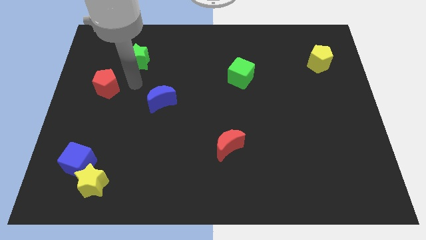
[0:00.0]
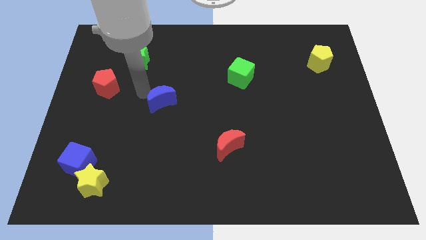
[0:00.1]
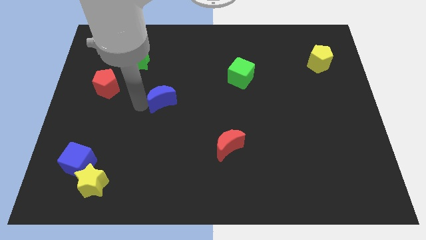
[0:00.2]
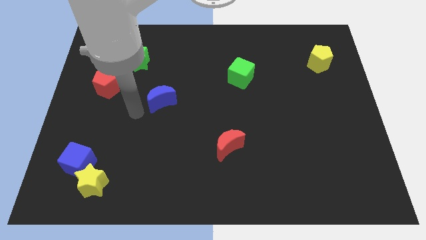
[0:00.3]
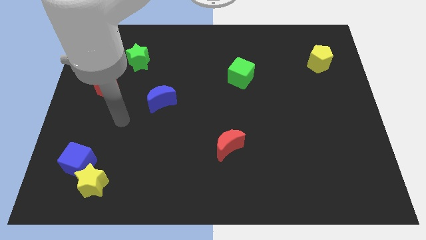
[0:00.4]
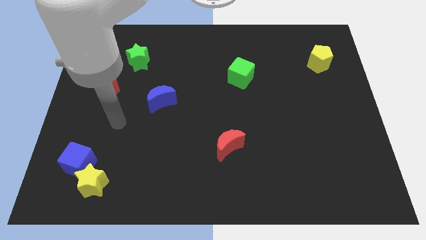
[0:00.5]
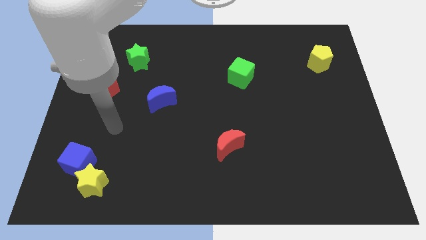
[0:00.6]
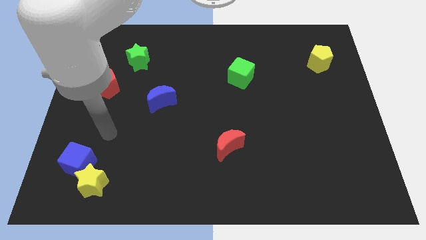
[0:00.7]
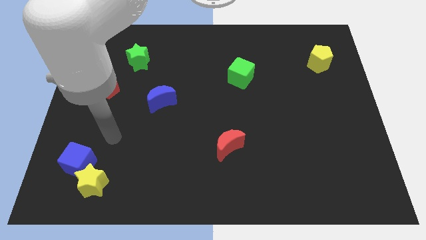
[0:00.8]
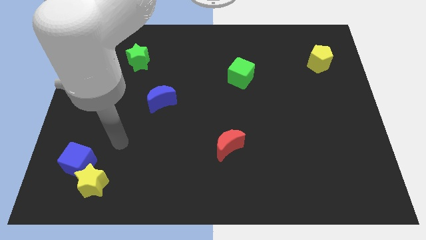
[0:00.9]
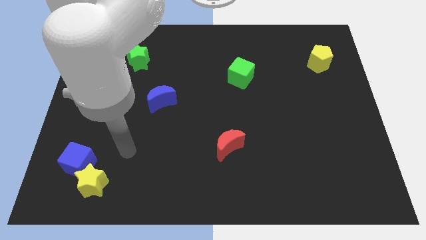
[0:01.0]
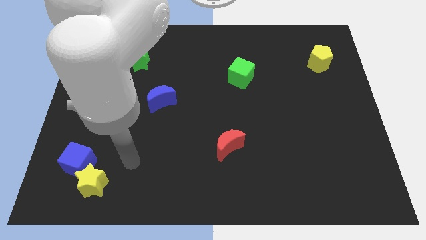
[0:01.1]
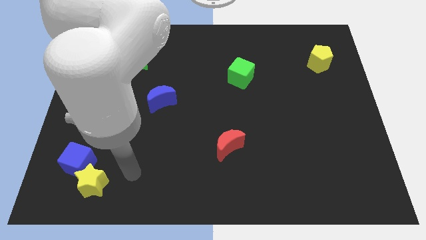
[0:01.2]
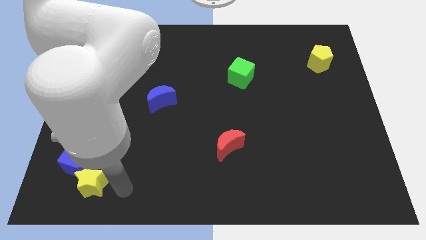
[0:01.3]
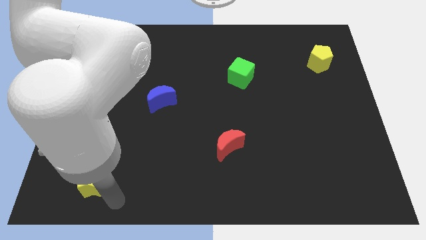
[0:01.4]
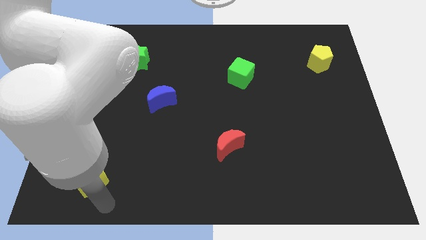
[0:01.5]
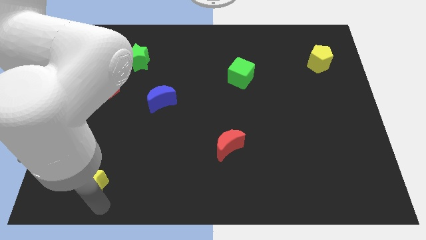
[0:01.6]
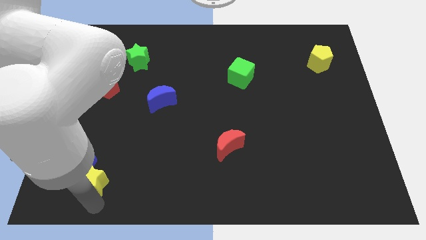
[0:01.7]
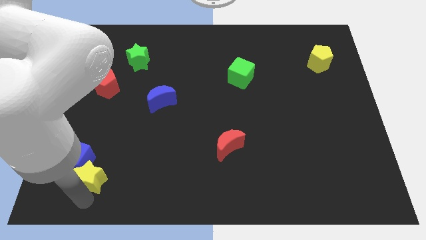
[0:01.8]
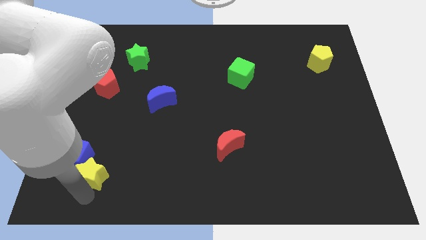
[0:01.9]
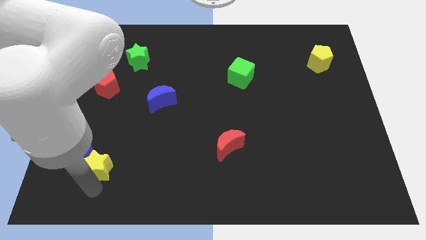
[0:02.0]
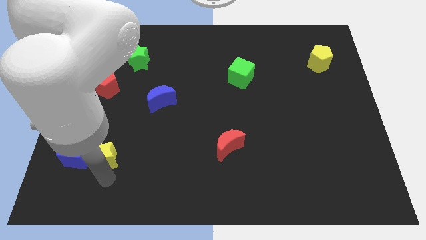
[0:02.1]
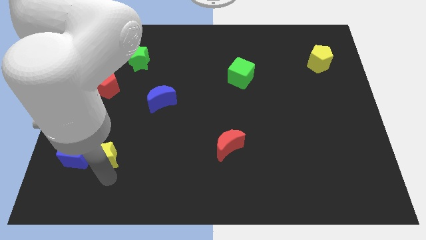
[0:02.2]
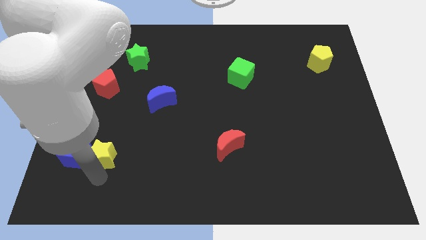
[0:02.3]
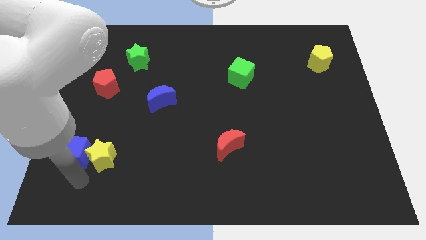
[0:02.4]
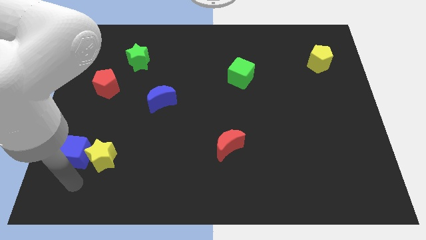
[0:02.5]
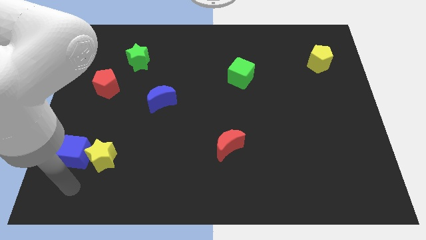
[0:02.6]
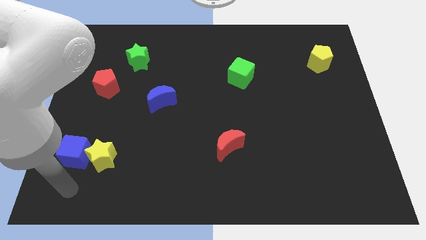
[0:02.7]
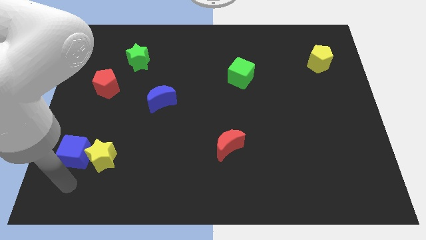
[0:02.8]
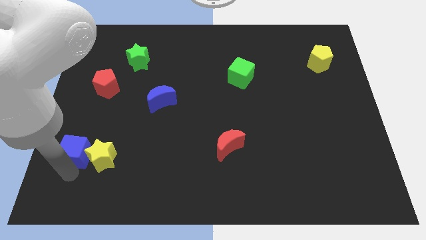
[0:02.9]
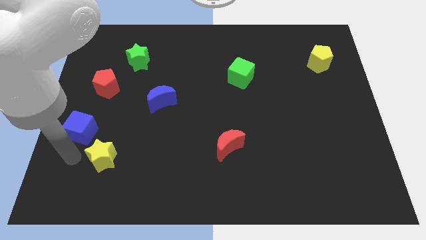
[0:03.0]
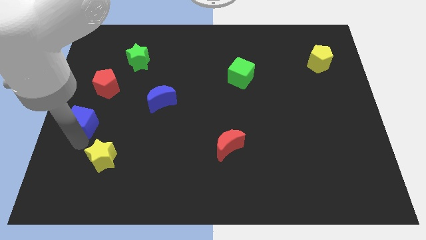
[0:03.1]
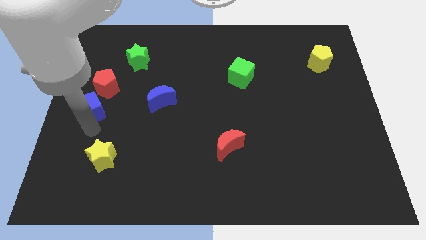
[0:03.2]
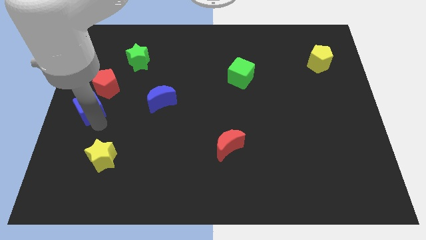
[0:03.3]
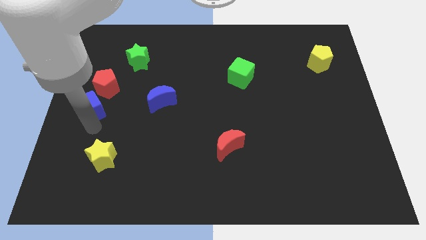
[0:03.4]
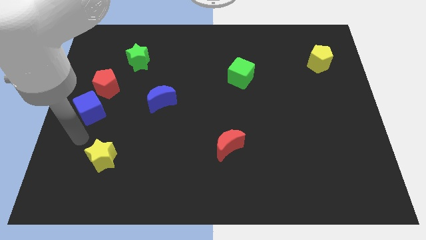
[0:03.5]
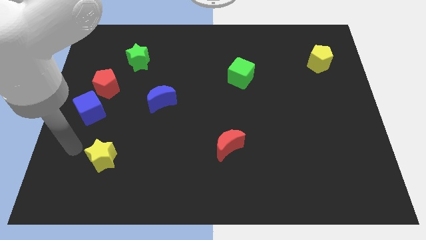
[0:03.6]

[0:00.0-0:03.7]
slide the blue cube towards the bottom side of the red pentagon

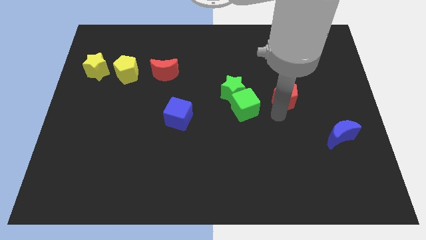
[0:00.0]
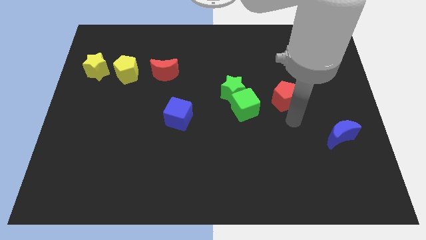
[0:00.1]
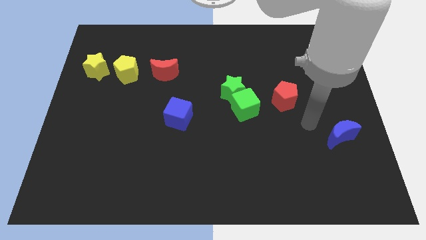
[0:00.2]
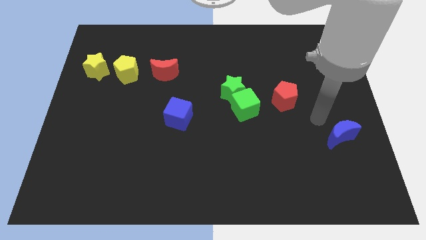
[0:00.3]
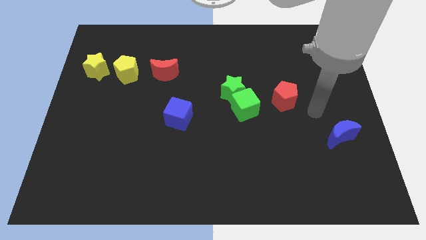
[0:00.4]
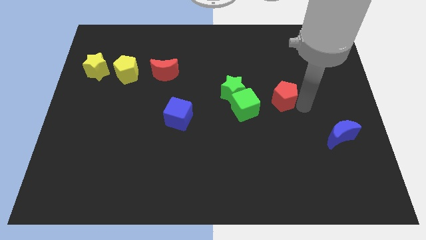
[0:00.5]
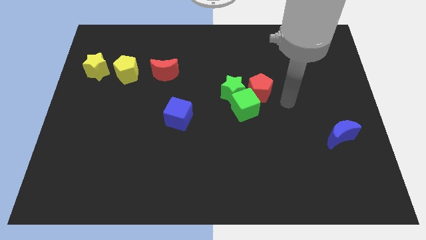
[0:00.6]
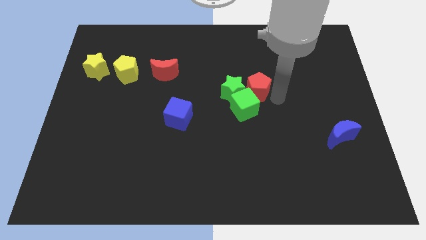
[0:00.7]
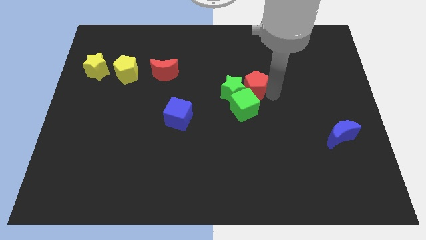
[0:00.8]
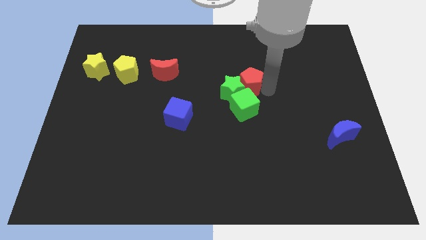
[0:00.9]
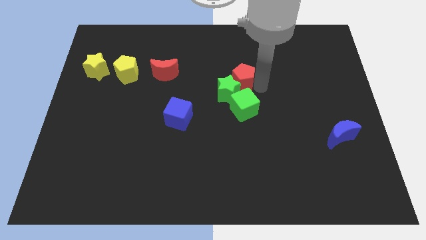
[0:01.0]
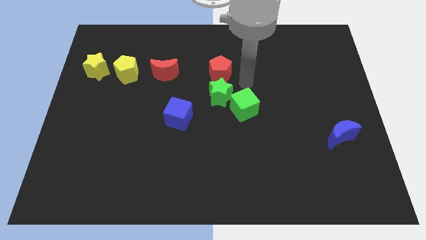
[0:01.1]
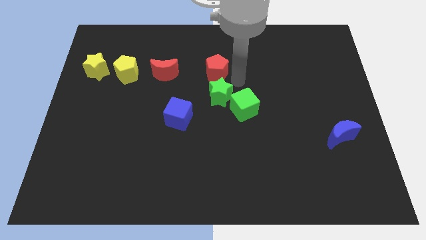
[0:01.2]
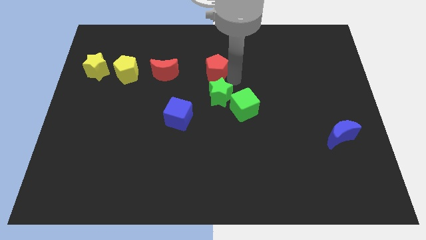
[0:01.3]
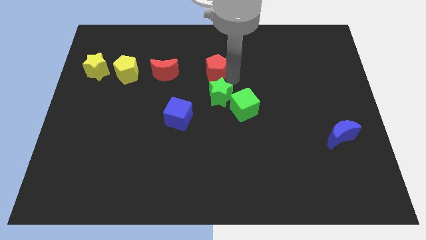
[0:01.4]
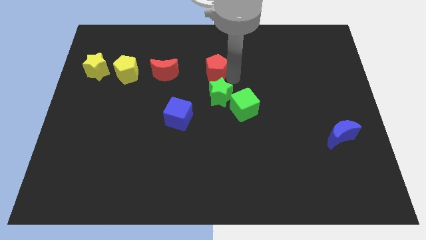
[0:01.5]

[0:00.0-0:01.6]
place the red pentagon above the green star

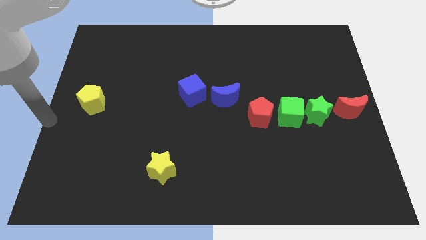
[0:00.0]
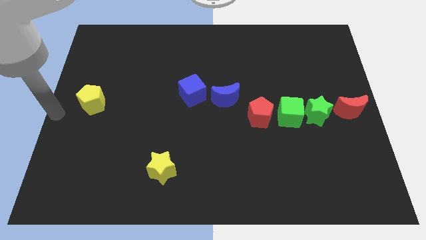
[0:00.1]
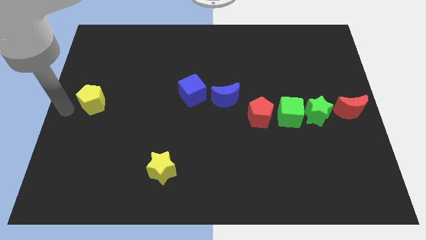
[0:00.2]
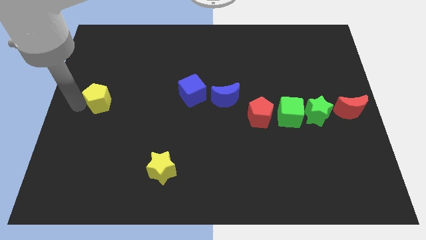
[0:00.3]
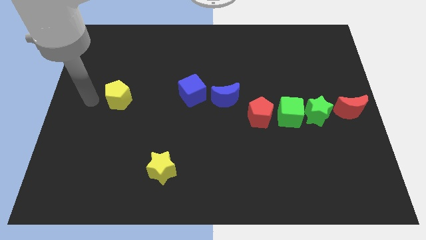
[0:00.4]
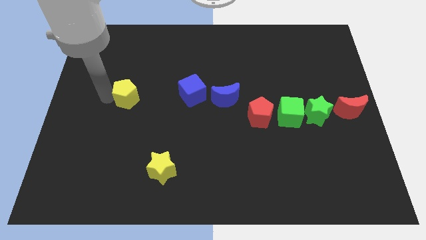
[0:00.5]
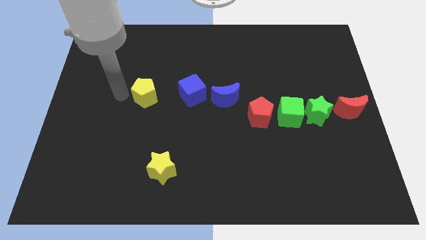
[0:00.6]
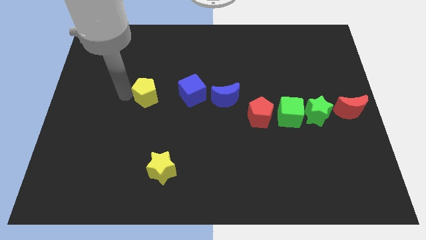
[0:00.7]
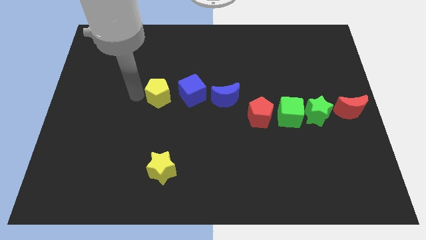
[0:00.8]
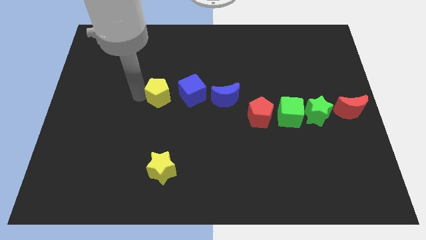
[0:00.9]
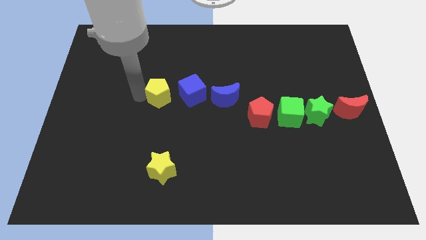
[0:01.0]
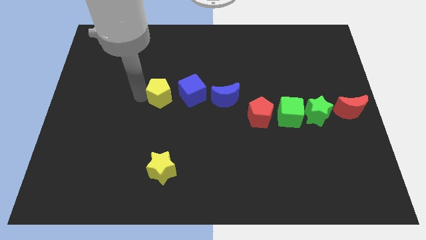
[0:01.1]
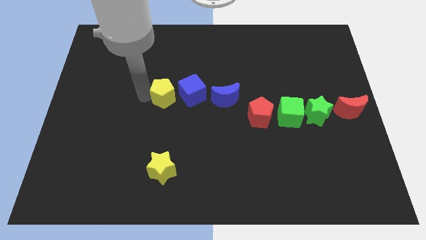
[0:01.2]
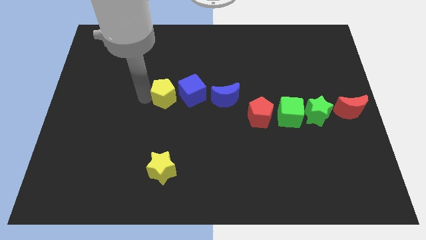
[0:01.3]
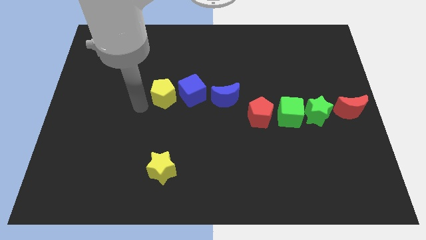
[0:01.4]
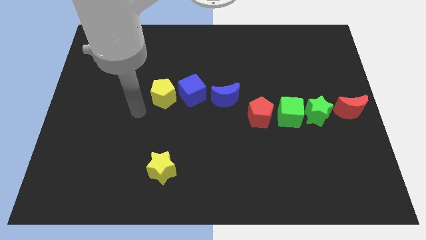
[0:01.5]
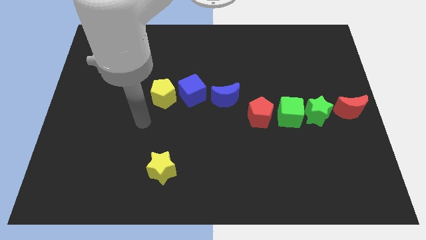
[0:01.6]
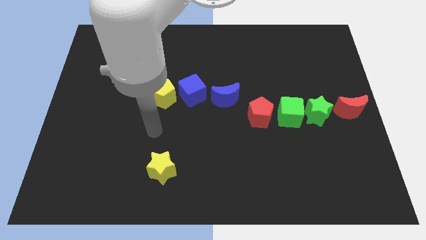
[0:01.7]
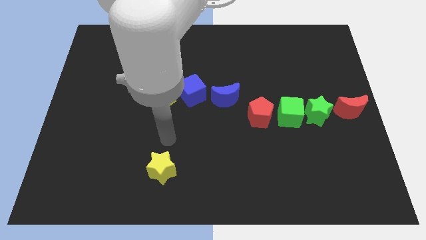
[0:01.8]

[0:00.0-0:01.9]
move the yellow pentagon close to the blue cube

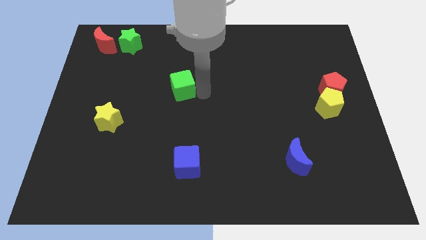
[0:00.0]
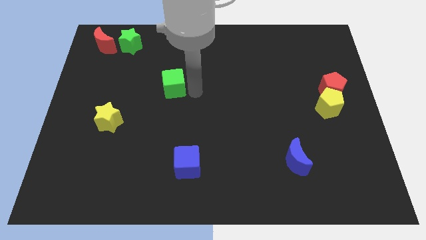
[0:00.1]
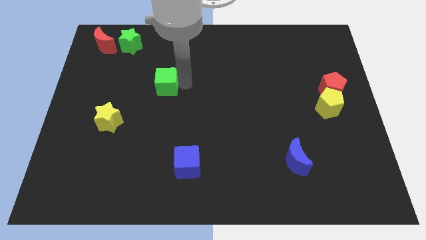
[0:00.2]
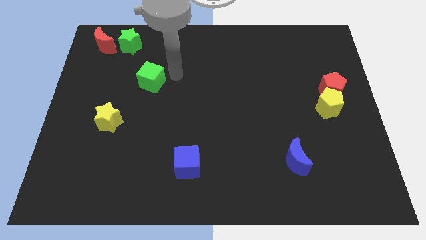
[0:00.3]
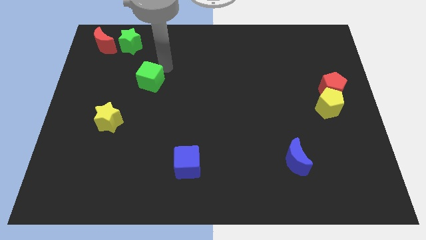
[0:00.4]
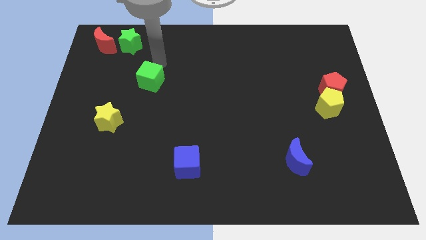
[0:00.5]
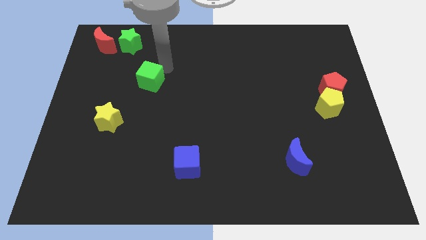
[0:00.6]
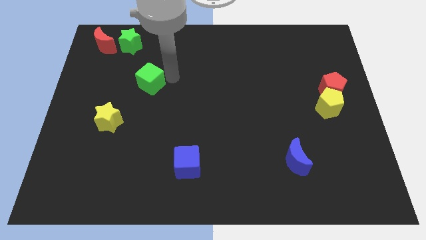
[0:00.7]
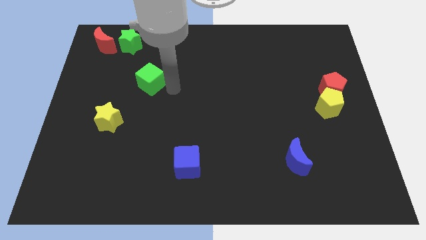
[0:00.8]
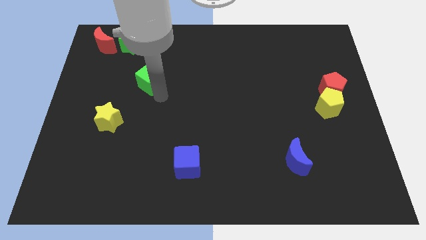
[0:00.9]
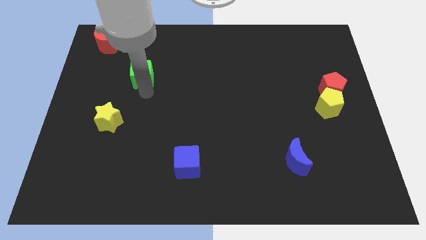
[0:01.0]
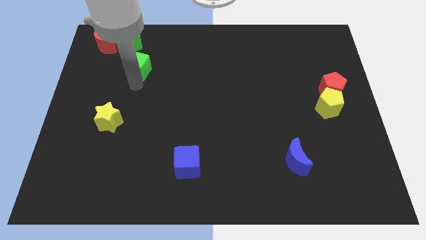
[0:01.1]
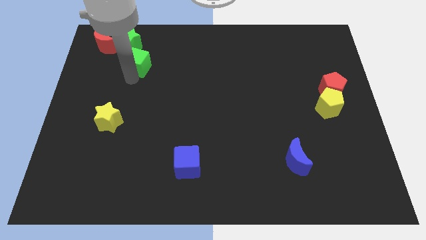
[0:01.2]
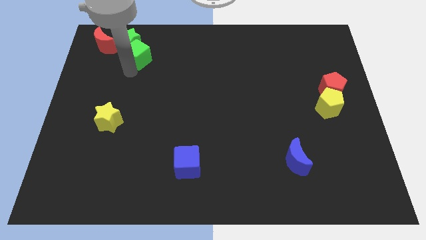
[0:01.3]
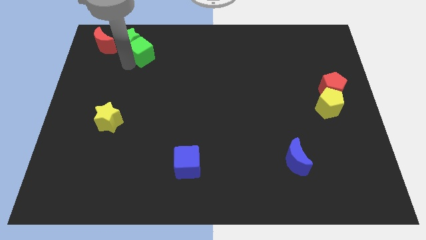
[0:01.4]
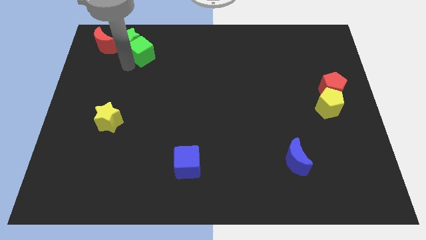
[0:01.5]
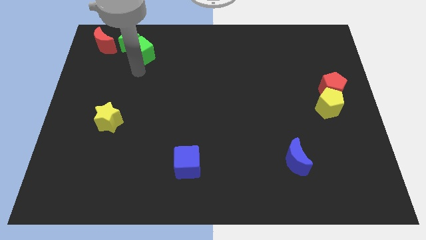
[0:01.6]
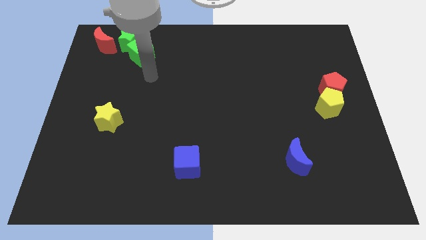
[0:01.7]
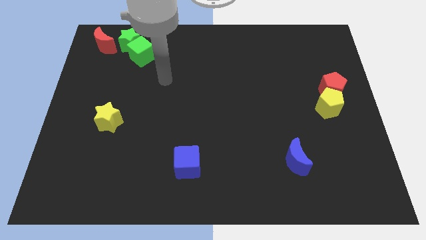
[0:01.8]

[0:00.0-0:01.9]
put the green cube diagonal right into green star at top

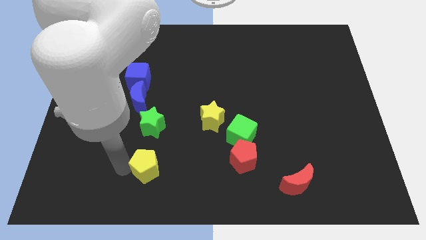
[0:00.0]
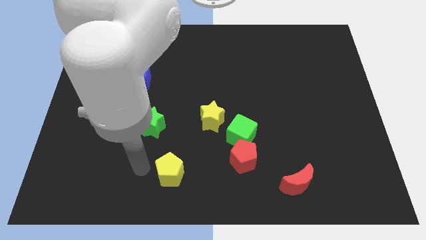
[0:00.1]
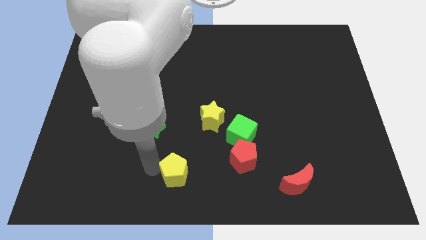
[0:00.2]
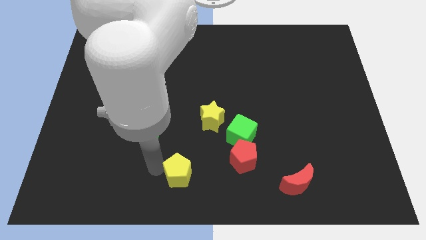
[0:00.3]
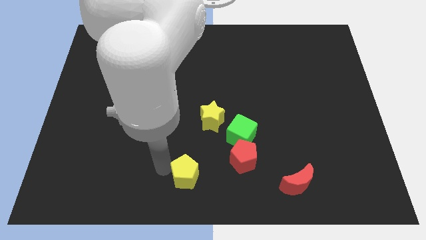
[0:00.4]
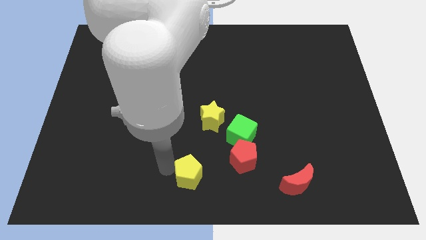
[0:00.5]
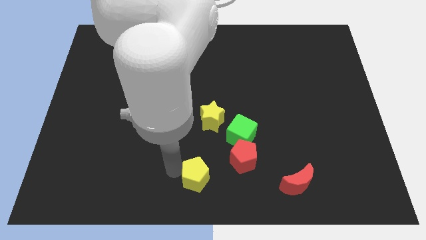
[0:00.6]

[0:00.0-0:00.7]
push the yellow pentagon slightly to the right of the board
